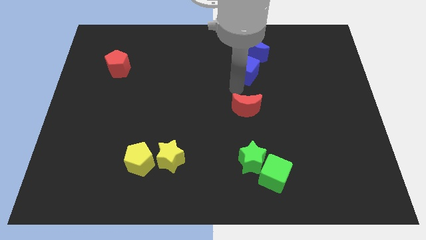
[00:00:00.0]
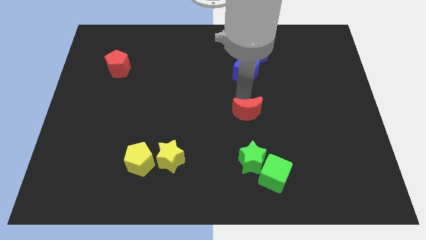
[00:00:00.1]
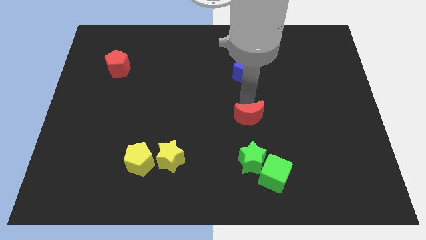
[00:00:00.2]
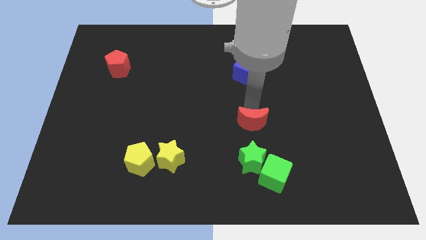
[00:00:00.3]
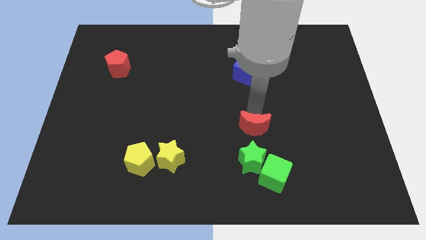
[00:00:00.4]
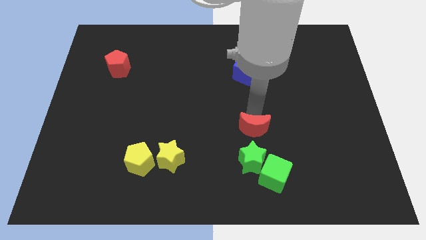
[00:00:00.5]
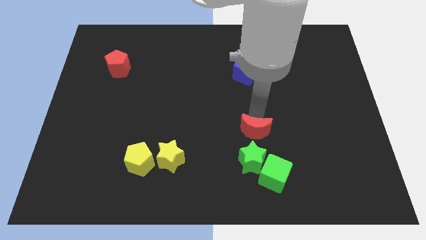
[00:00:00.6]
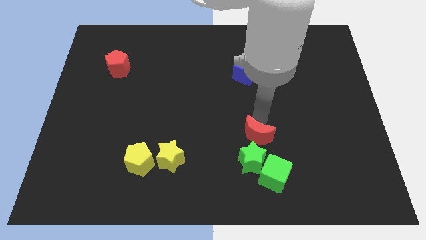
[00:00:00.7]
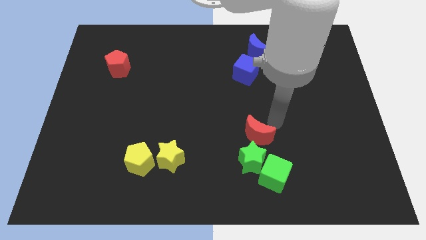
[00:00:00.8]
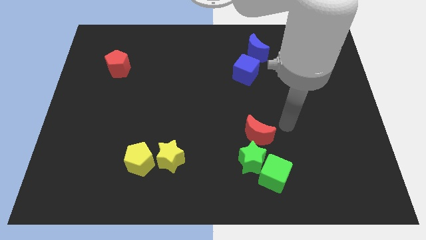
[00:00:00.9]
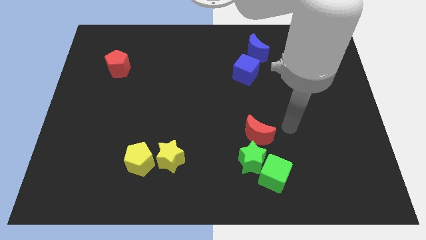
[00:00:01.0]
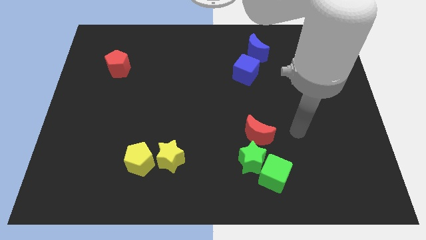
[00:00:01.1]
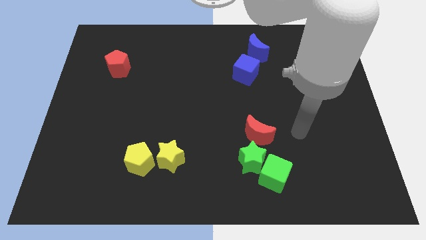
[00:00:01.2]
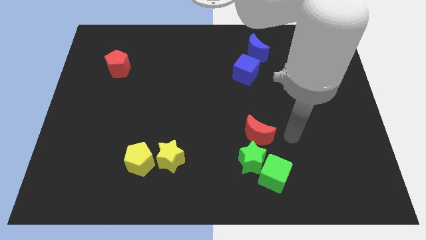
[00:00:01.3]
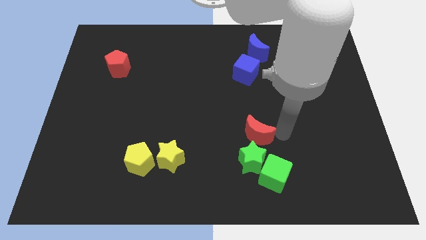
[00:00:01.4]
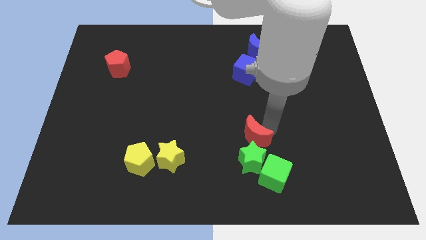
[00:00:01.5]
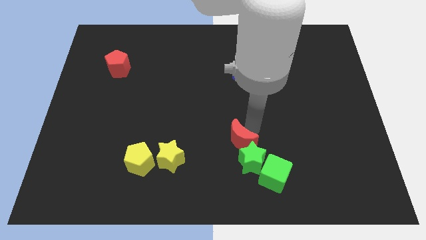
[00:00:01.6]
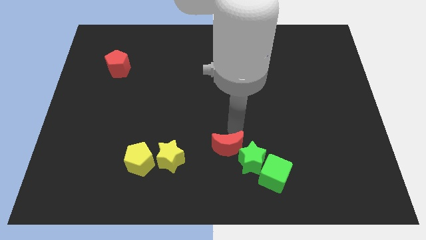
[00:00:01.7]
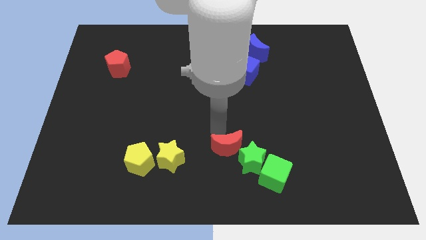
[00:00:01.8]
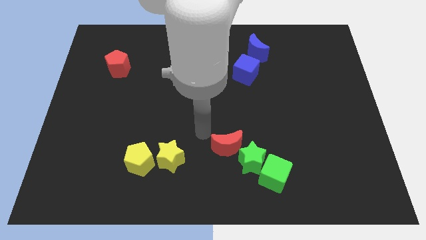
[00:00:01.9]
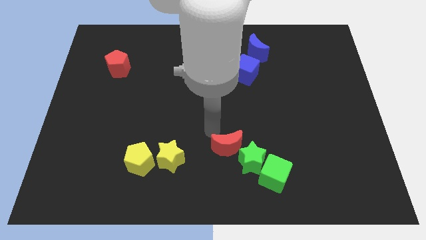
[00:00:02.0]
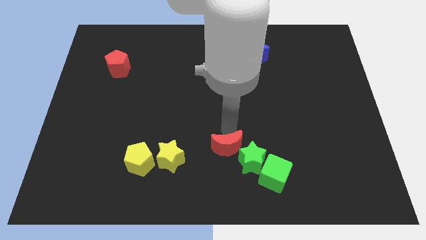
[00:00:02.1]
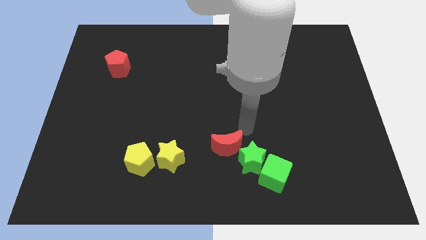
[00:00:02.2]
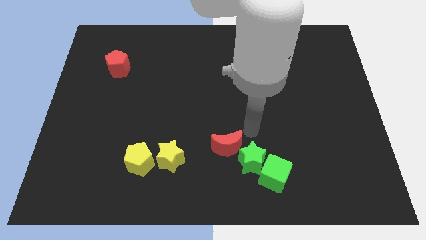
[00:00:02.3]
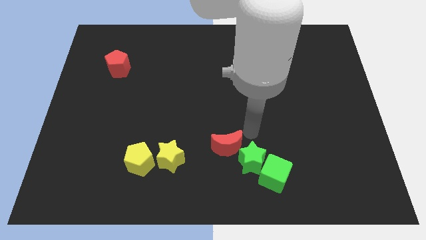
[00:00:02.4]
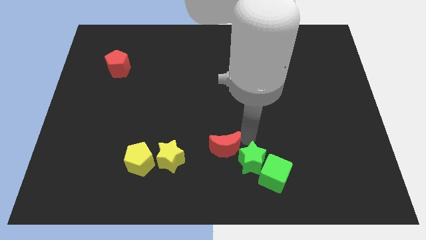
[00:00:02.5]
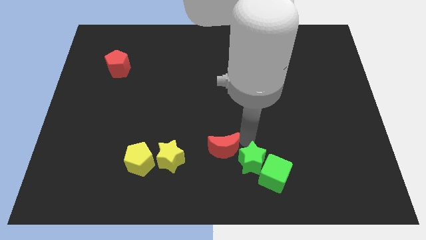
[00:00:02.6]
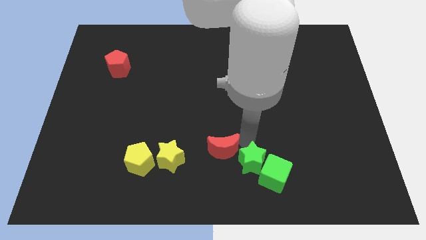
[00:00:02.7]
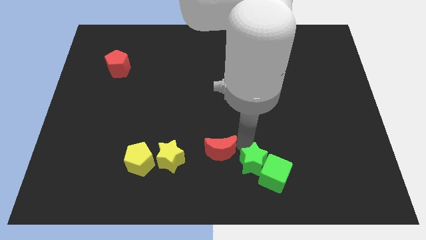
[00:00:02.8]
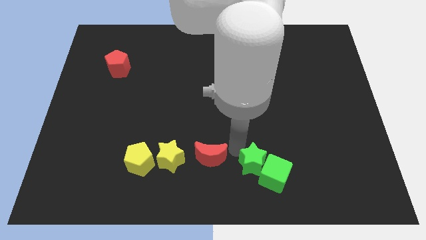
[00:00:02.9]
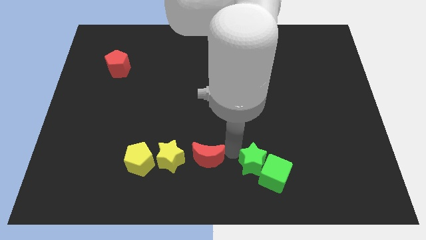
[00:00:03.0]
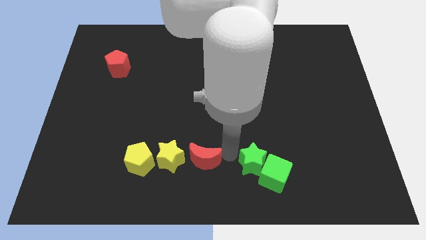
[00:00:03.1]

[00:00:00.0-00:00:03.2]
move the red crescent towards the bottom center of the board

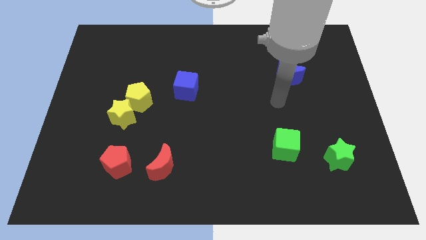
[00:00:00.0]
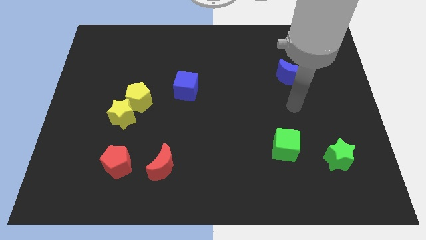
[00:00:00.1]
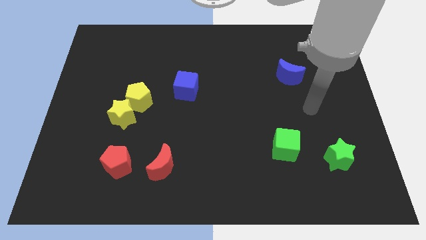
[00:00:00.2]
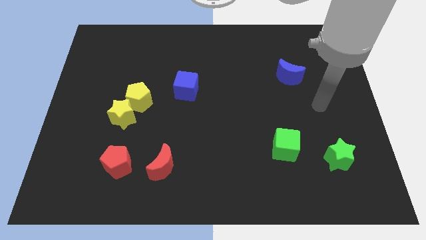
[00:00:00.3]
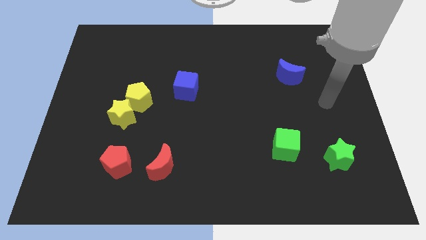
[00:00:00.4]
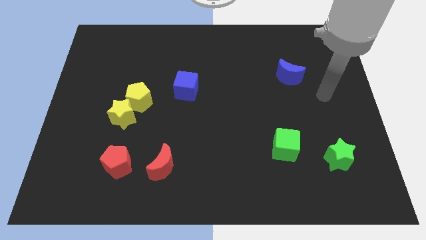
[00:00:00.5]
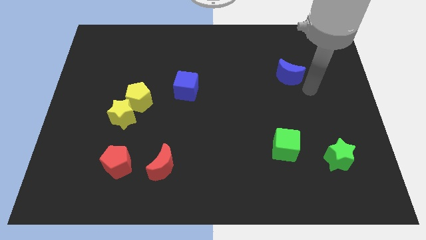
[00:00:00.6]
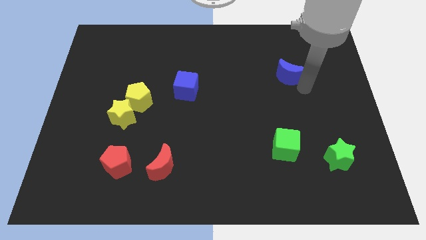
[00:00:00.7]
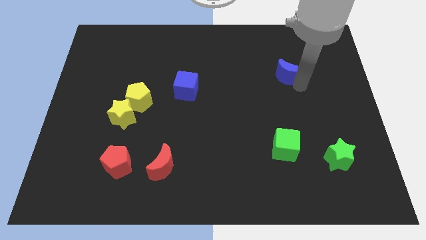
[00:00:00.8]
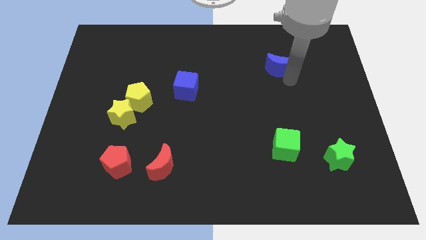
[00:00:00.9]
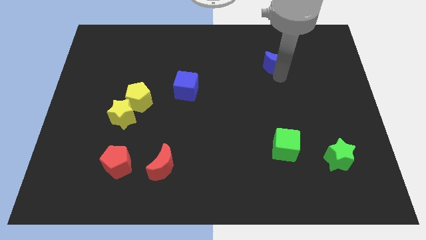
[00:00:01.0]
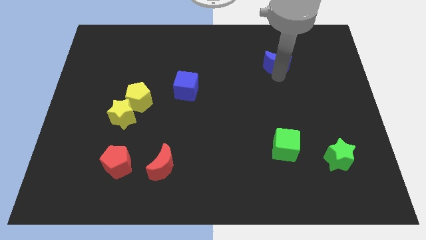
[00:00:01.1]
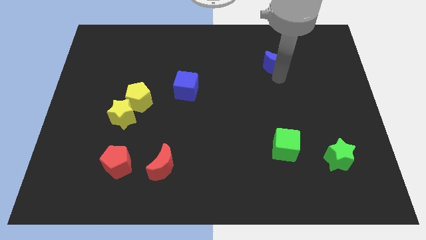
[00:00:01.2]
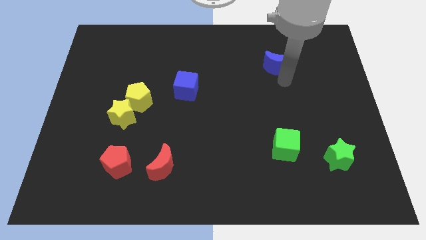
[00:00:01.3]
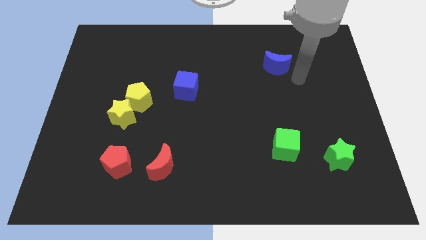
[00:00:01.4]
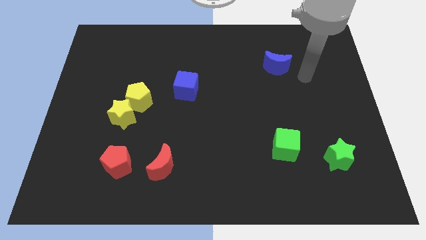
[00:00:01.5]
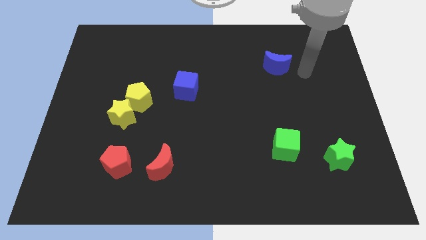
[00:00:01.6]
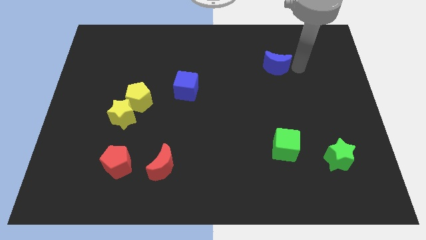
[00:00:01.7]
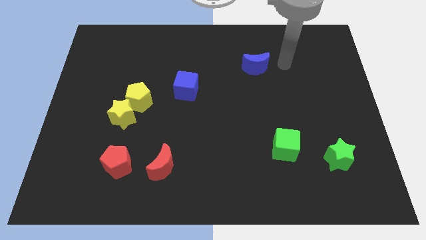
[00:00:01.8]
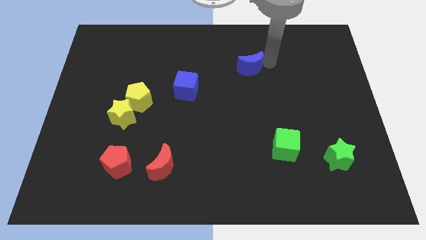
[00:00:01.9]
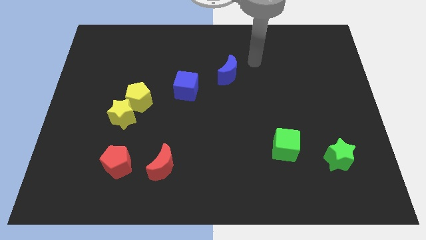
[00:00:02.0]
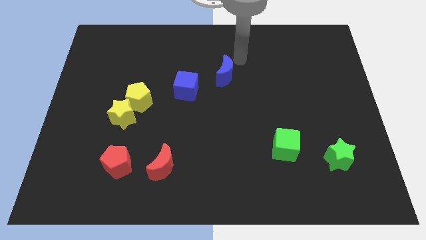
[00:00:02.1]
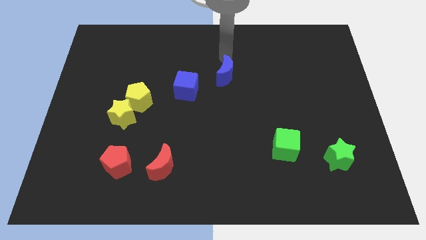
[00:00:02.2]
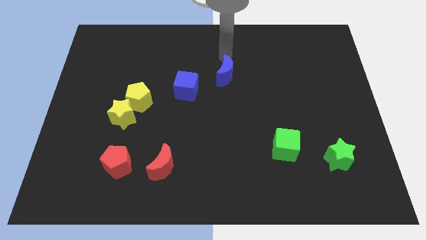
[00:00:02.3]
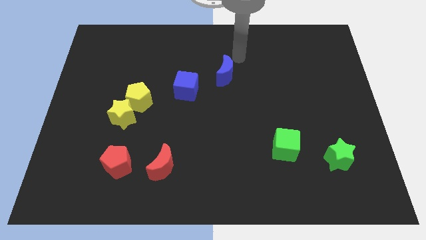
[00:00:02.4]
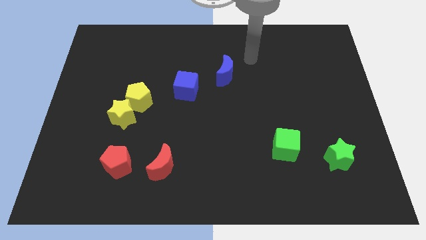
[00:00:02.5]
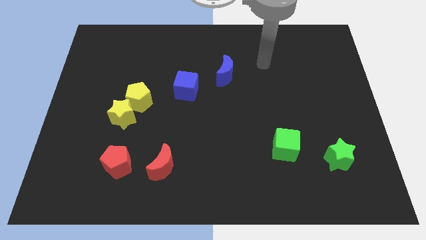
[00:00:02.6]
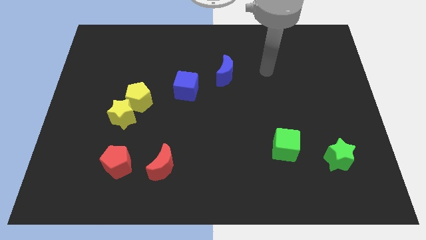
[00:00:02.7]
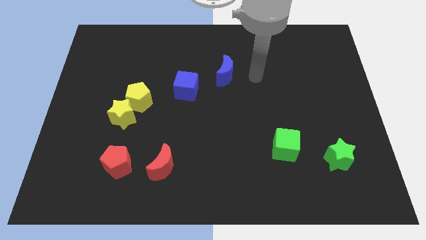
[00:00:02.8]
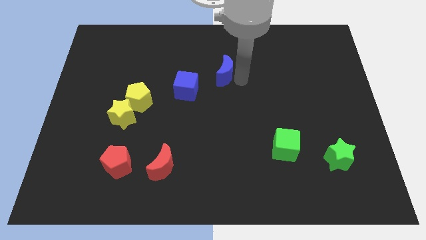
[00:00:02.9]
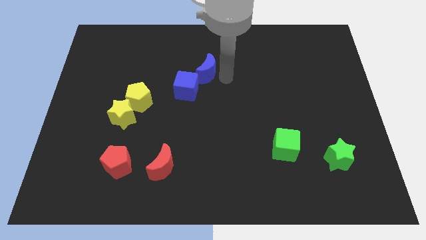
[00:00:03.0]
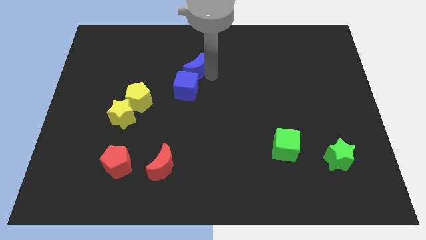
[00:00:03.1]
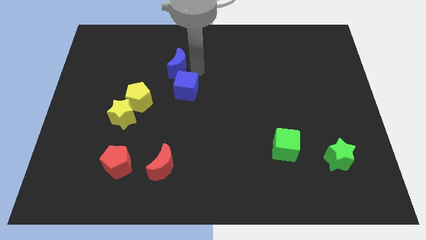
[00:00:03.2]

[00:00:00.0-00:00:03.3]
place blue moon to the top of blue cube

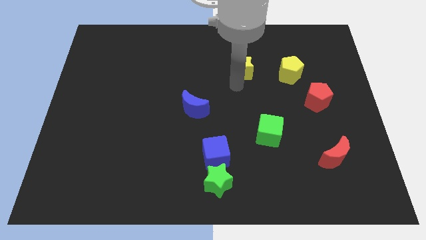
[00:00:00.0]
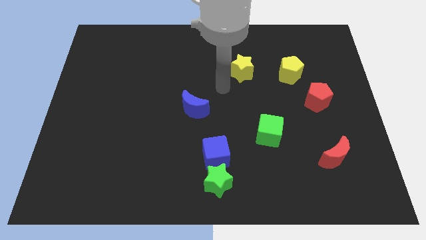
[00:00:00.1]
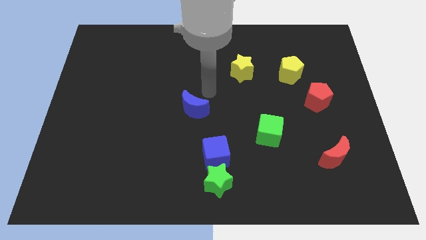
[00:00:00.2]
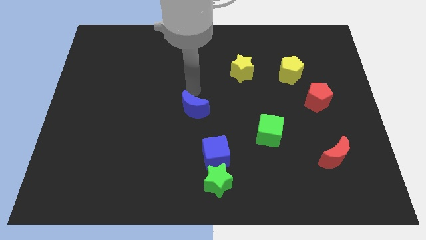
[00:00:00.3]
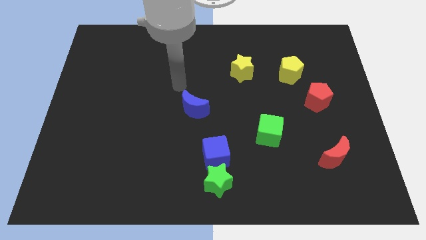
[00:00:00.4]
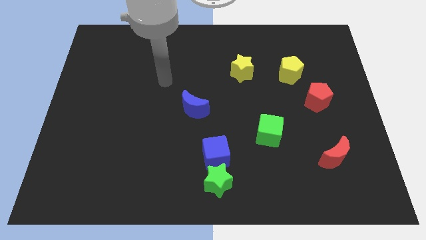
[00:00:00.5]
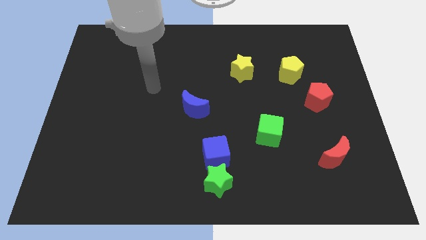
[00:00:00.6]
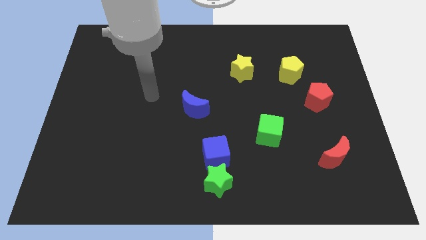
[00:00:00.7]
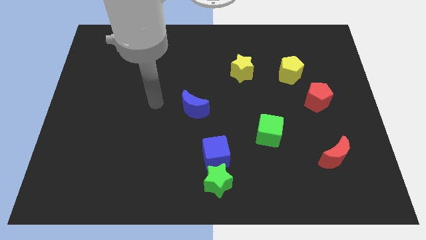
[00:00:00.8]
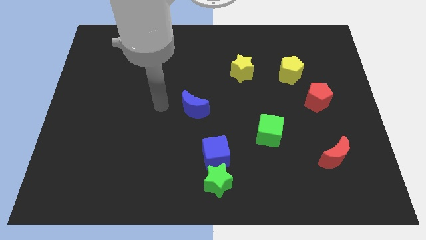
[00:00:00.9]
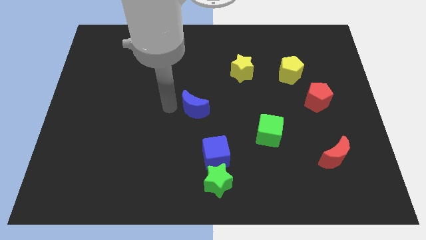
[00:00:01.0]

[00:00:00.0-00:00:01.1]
slide your arm to the left of the blue moon

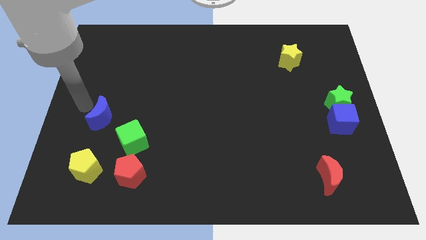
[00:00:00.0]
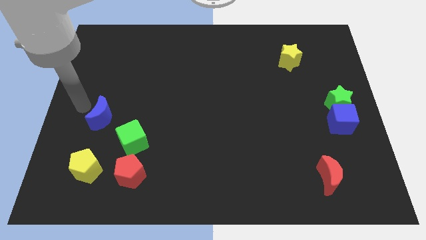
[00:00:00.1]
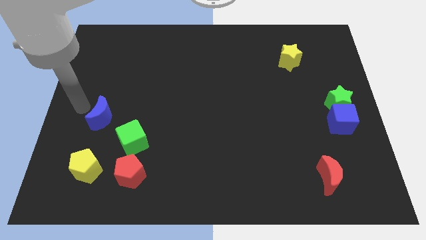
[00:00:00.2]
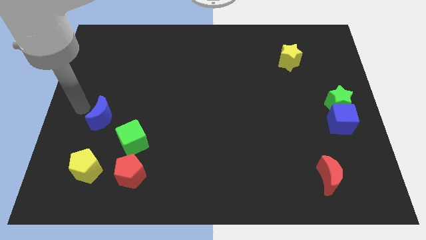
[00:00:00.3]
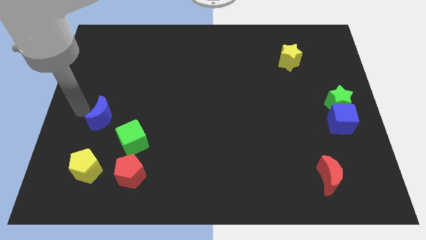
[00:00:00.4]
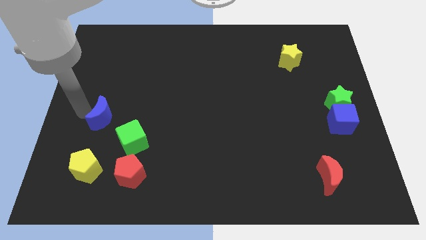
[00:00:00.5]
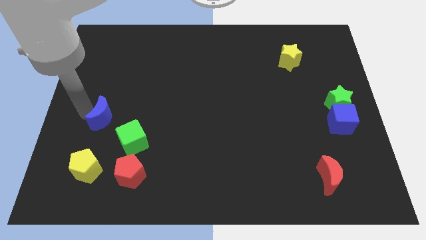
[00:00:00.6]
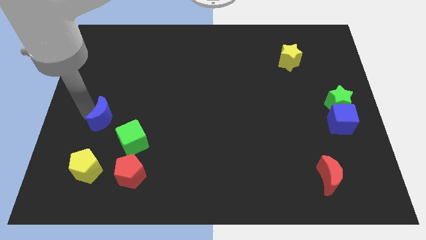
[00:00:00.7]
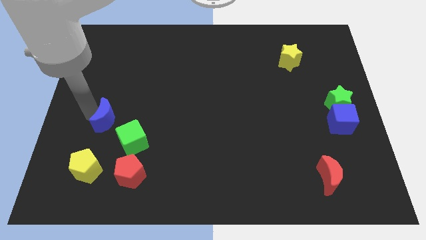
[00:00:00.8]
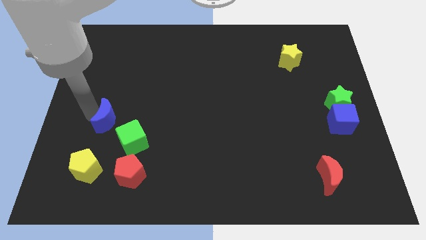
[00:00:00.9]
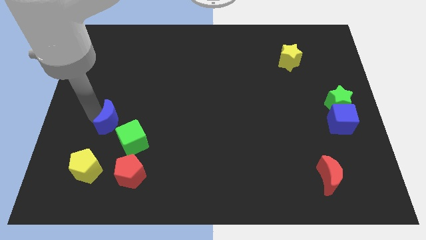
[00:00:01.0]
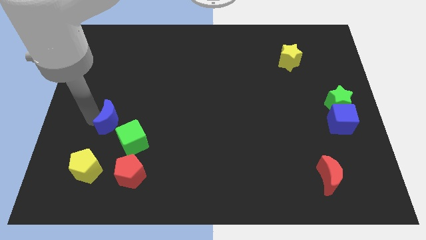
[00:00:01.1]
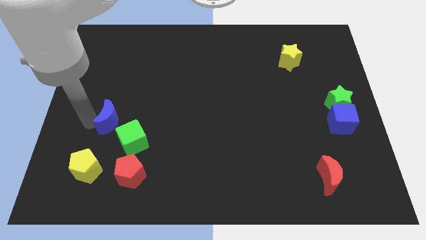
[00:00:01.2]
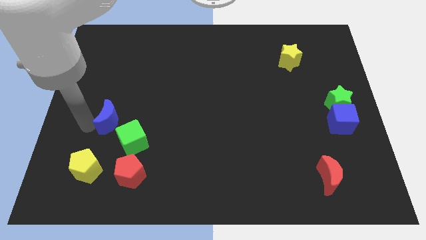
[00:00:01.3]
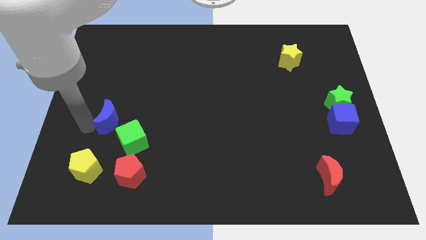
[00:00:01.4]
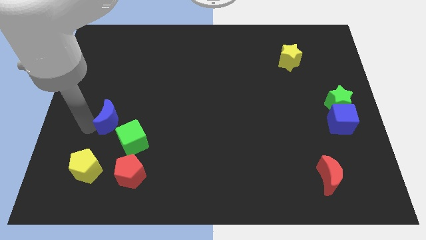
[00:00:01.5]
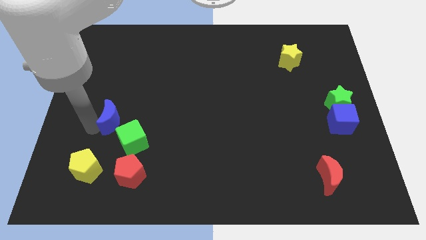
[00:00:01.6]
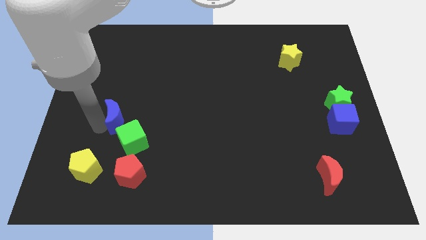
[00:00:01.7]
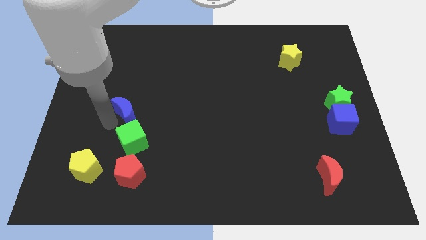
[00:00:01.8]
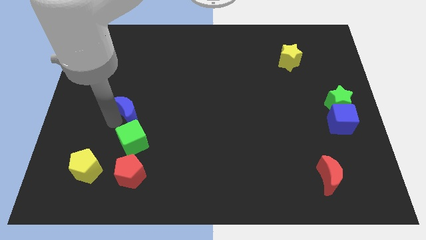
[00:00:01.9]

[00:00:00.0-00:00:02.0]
push blue crescent above green cube
